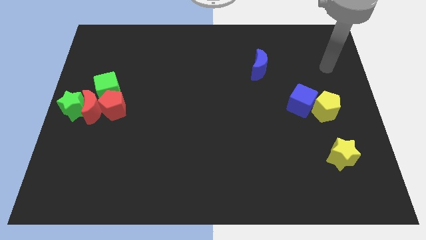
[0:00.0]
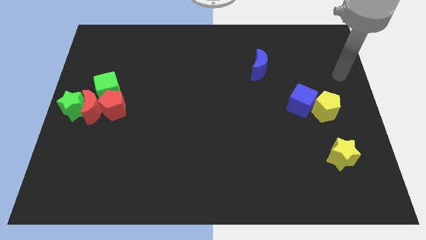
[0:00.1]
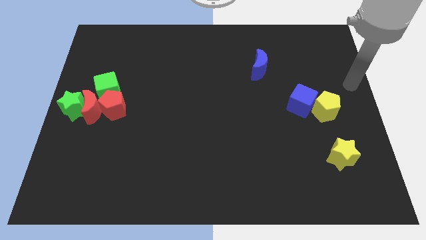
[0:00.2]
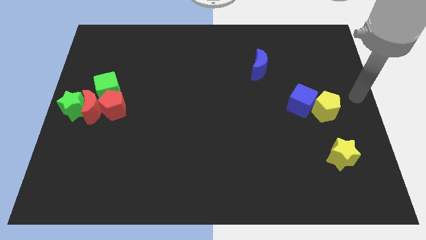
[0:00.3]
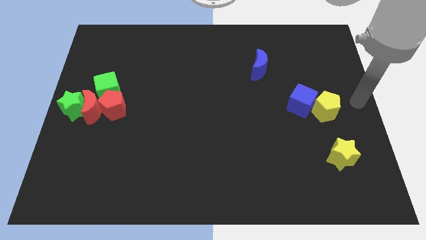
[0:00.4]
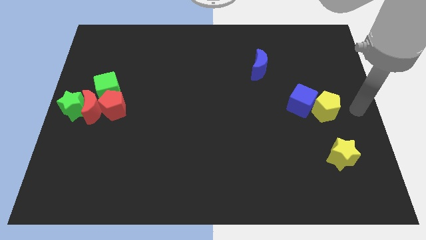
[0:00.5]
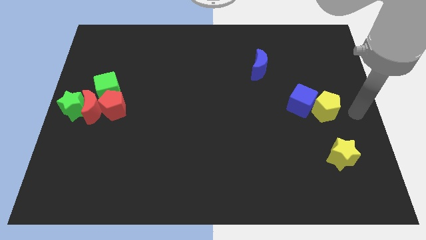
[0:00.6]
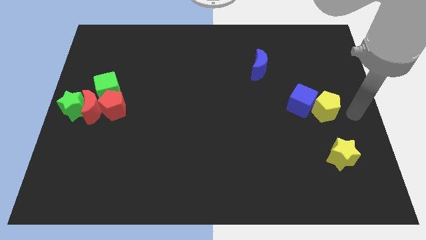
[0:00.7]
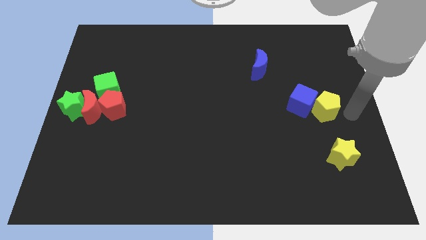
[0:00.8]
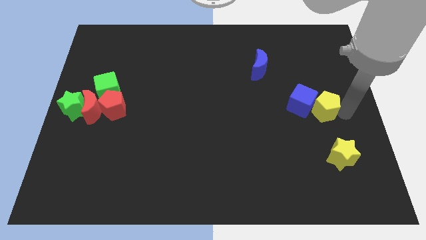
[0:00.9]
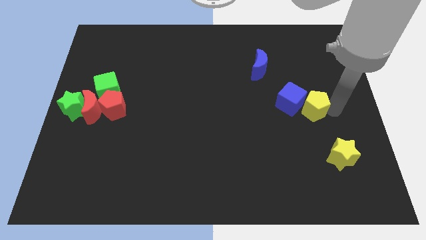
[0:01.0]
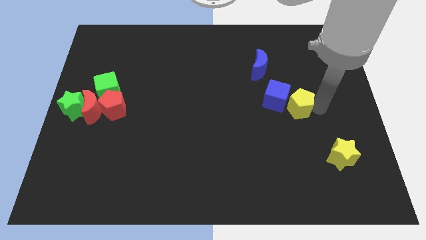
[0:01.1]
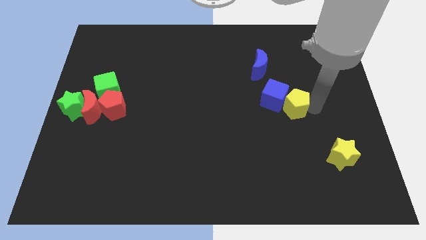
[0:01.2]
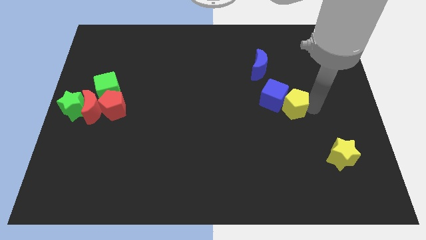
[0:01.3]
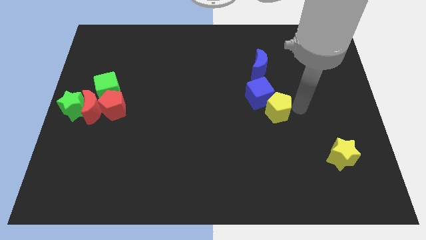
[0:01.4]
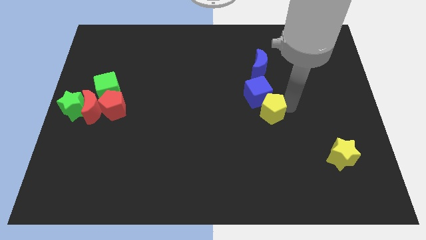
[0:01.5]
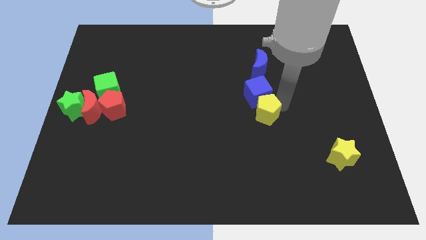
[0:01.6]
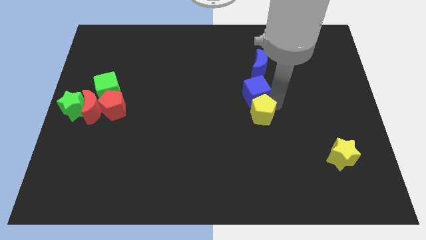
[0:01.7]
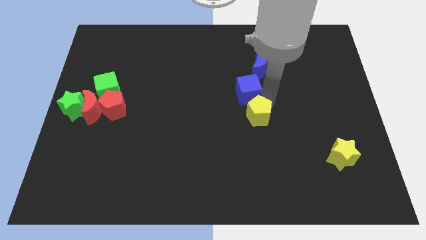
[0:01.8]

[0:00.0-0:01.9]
place yellow pentagon to the bottom of blue cube

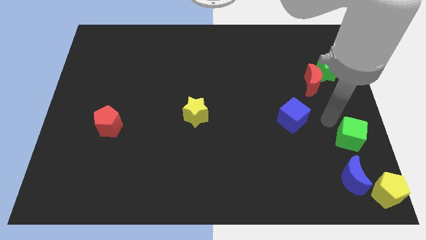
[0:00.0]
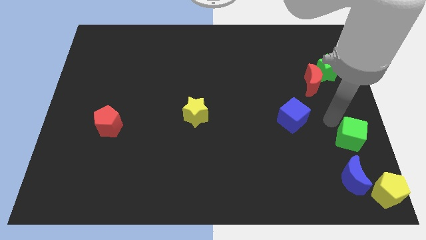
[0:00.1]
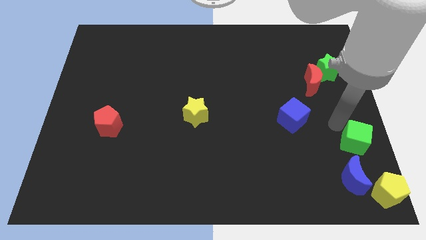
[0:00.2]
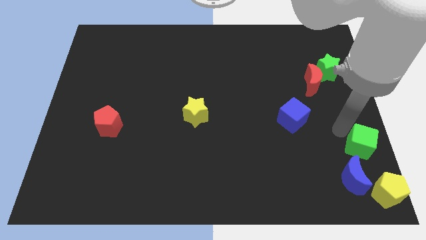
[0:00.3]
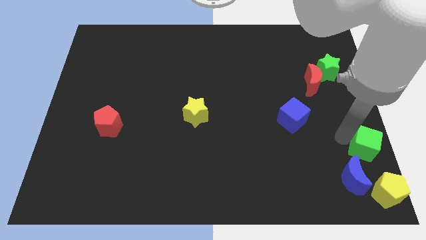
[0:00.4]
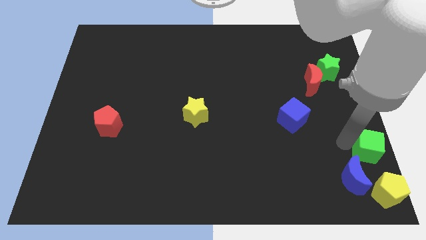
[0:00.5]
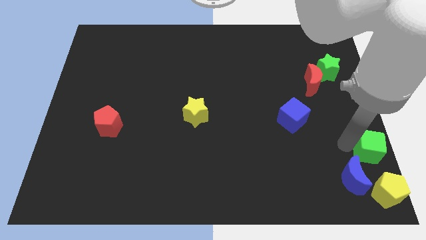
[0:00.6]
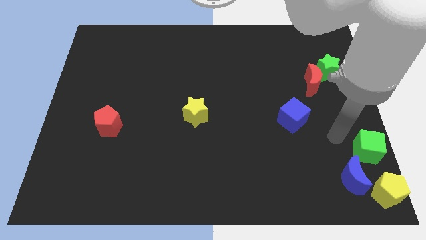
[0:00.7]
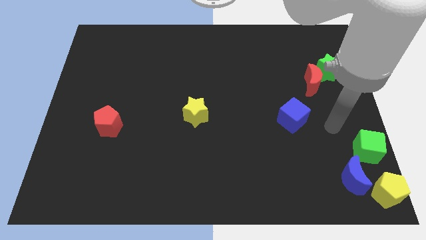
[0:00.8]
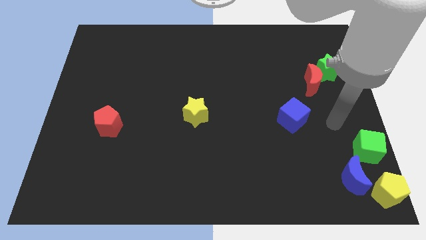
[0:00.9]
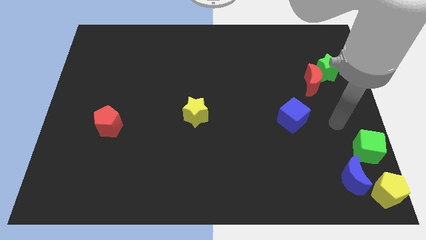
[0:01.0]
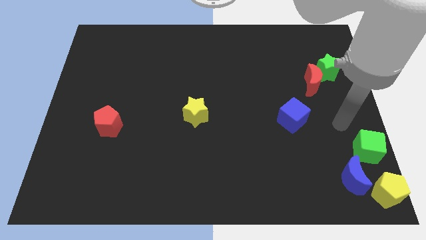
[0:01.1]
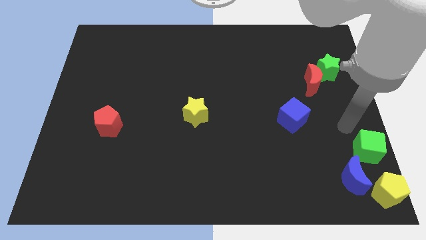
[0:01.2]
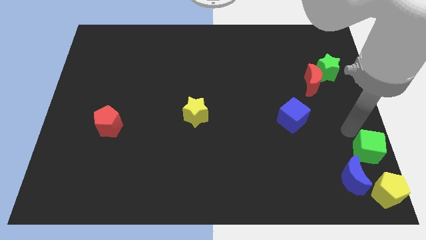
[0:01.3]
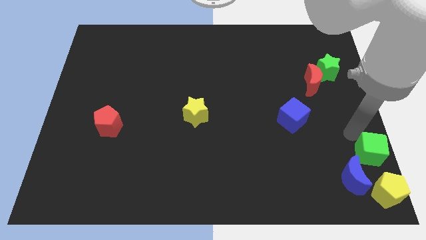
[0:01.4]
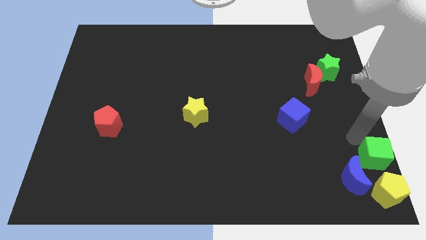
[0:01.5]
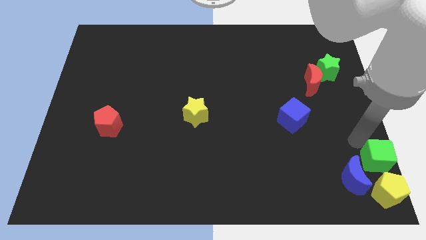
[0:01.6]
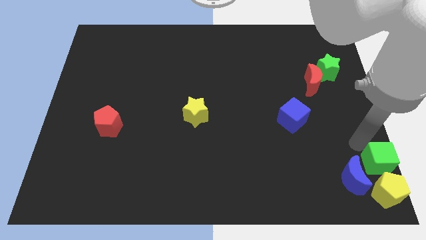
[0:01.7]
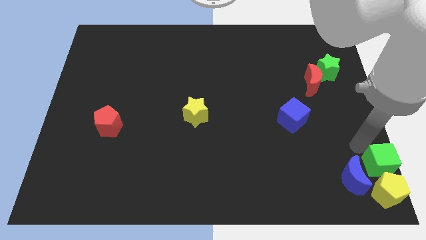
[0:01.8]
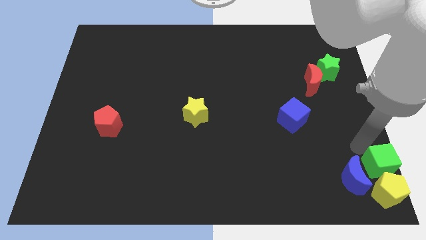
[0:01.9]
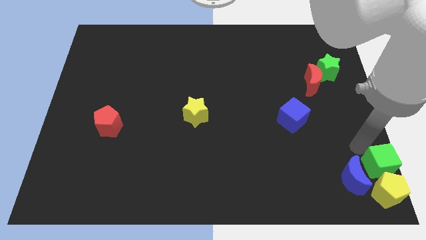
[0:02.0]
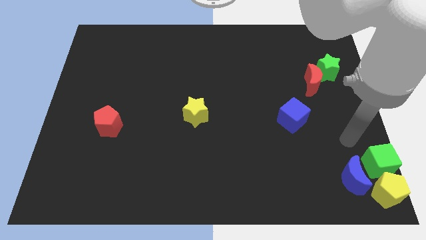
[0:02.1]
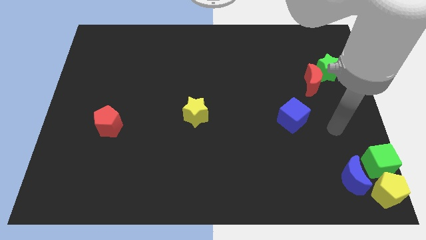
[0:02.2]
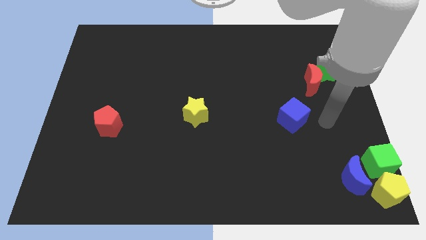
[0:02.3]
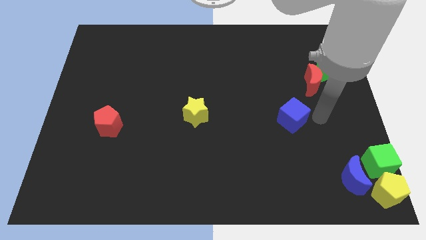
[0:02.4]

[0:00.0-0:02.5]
move the green cube to the top side of the yellow pentagon

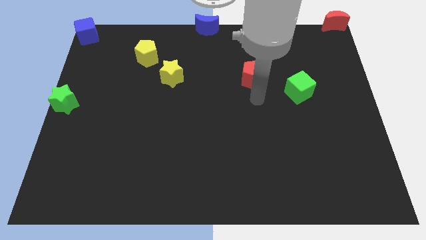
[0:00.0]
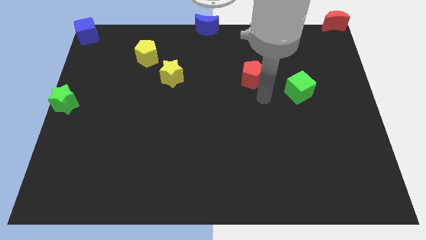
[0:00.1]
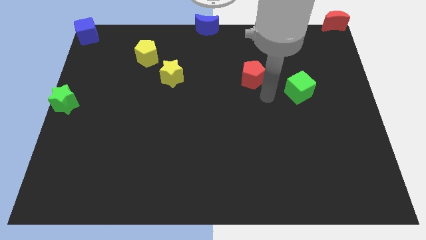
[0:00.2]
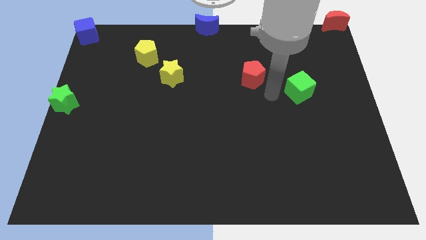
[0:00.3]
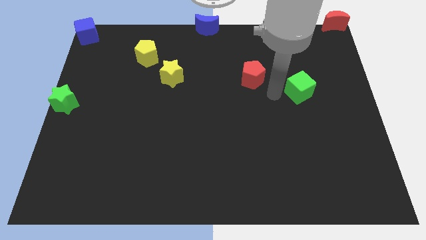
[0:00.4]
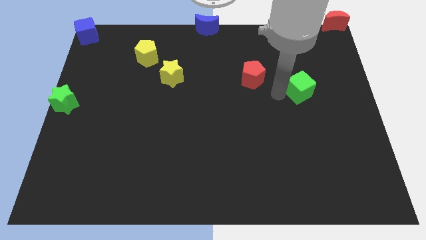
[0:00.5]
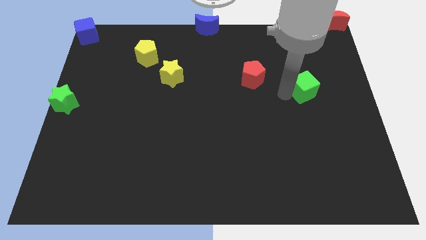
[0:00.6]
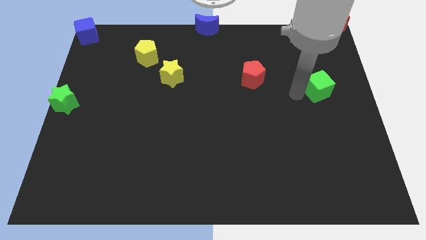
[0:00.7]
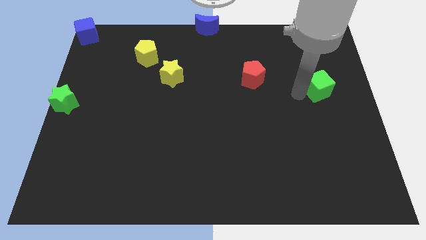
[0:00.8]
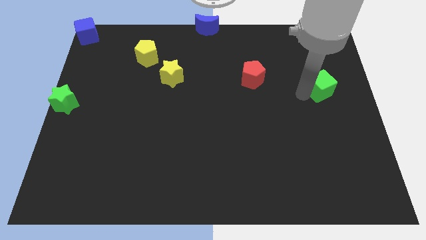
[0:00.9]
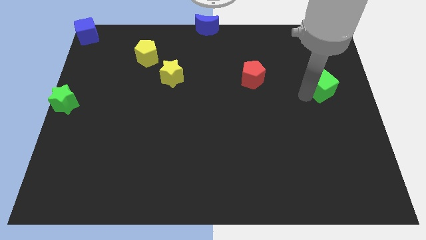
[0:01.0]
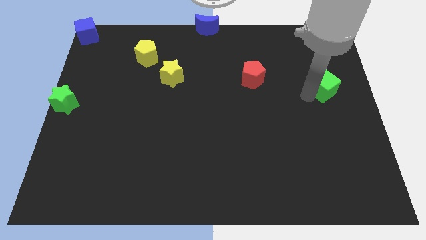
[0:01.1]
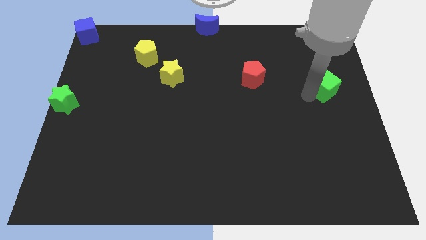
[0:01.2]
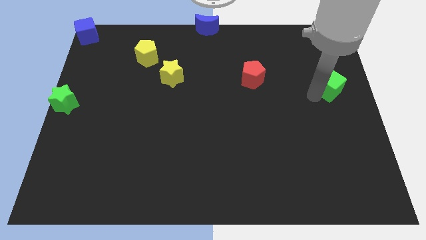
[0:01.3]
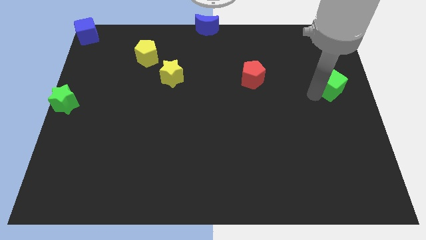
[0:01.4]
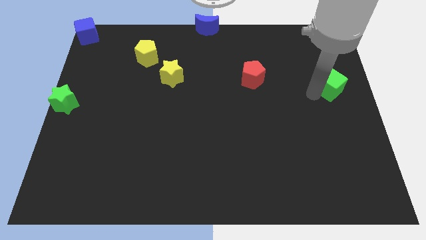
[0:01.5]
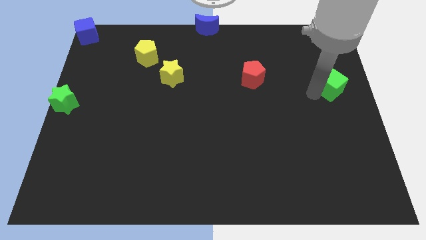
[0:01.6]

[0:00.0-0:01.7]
slightly push the green cube towards the right side of the board

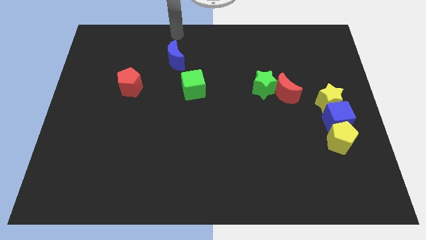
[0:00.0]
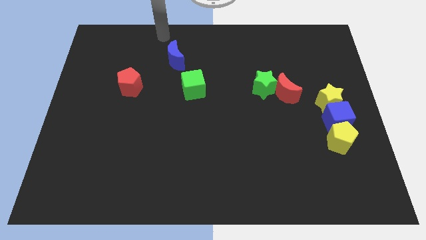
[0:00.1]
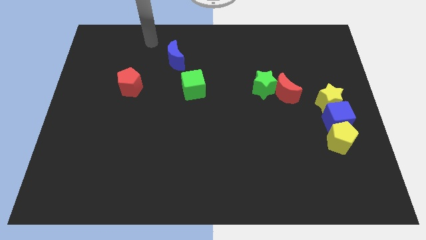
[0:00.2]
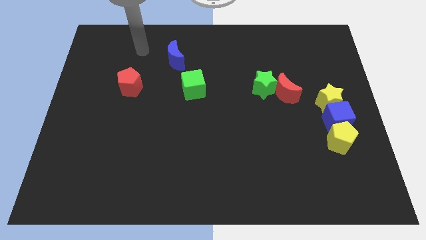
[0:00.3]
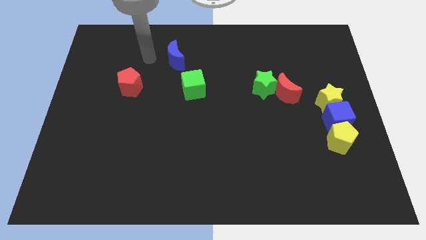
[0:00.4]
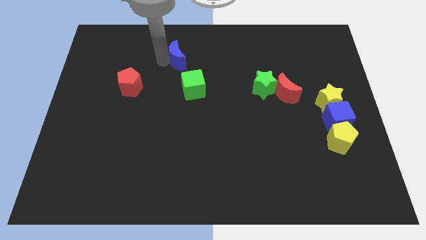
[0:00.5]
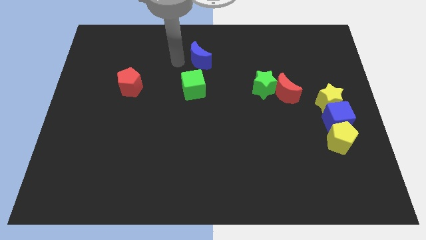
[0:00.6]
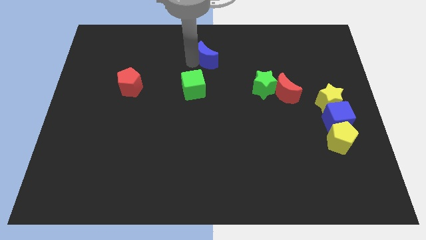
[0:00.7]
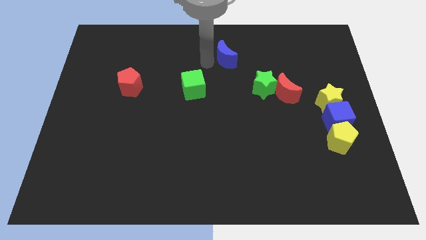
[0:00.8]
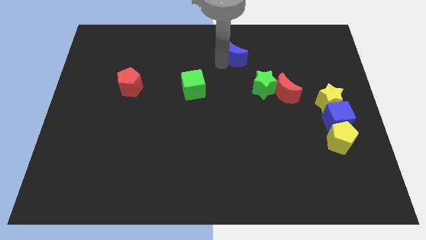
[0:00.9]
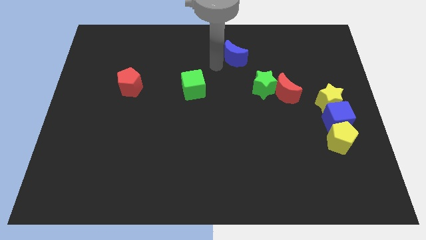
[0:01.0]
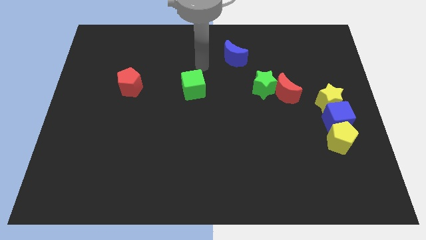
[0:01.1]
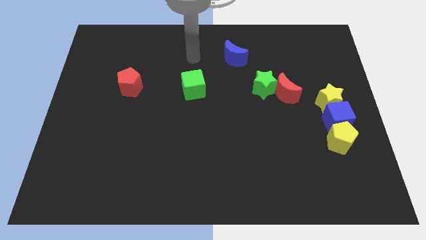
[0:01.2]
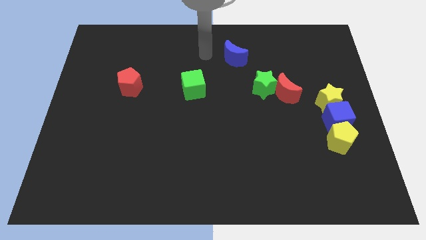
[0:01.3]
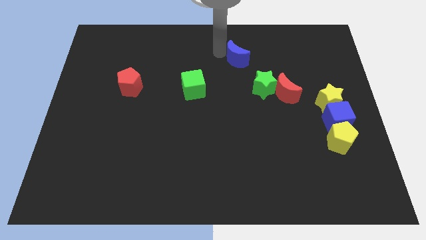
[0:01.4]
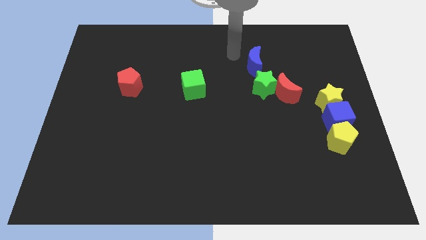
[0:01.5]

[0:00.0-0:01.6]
move the blue moon on top of green star

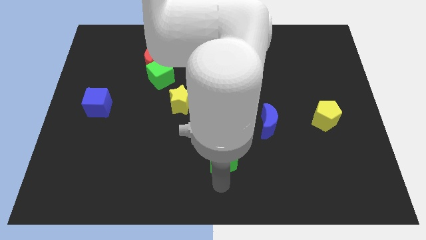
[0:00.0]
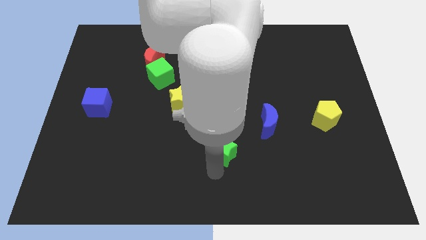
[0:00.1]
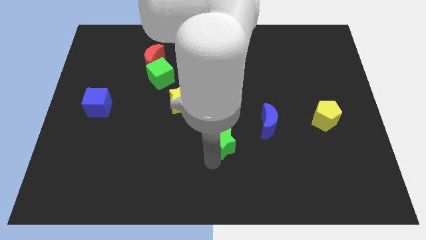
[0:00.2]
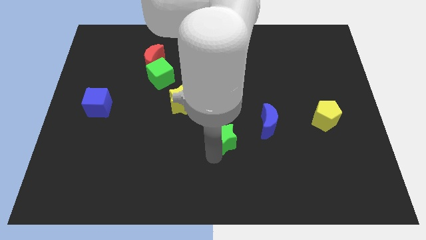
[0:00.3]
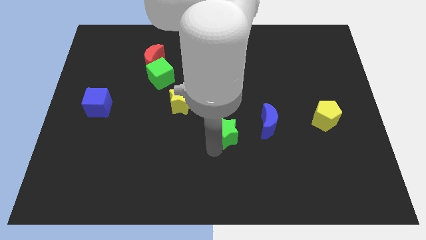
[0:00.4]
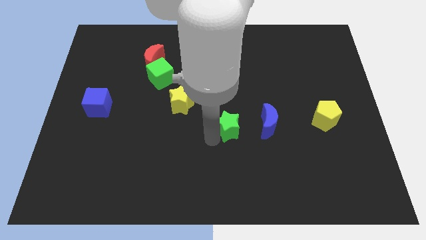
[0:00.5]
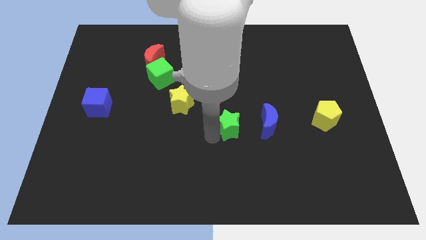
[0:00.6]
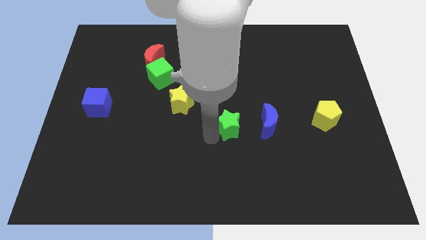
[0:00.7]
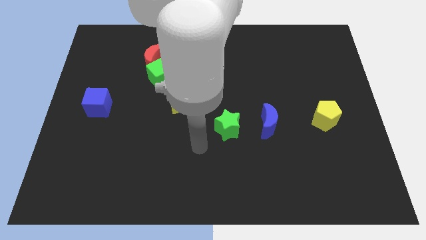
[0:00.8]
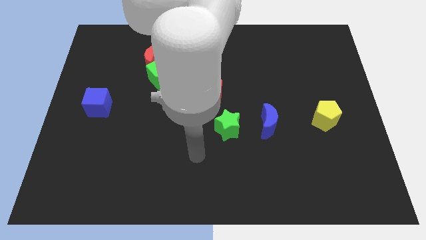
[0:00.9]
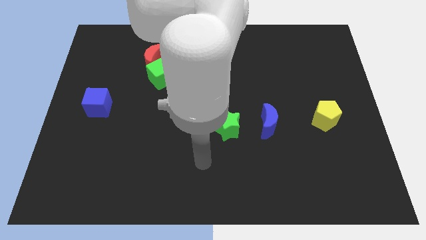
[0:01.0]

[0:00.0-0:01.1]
move the green star to the left of the blue crescent
